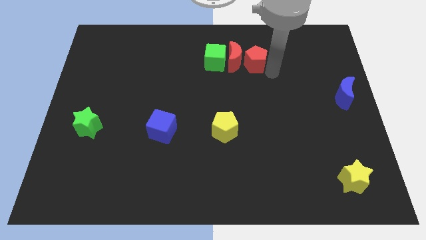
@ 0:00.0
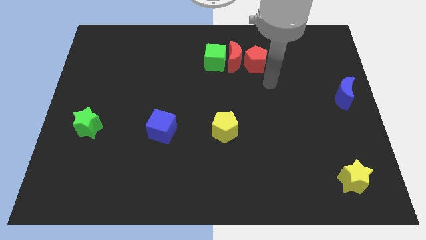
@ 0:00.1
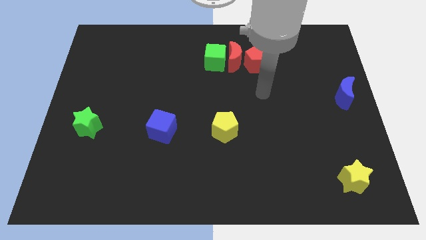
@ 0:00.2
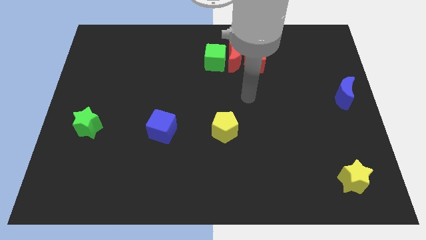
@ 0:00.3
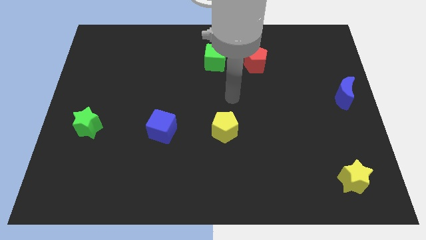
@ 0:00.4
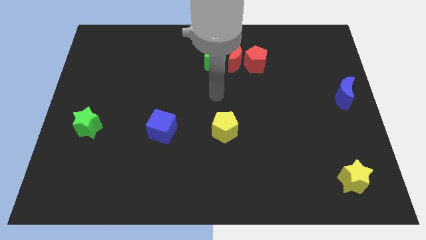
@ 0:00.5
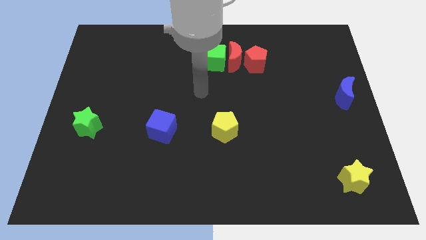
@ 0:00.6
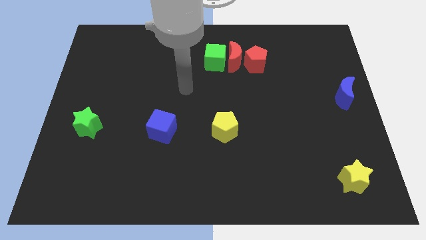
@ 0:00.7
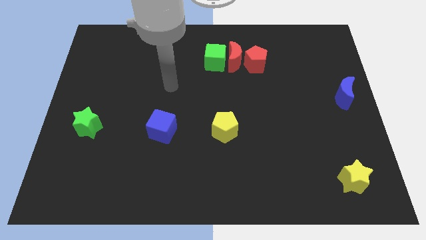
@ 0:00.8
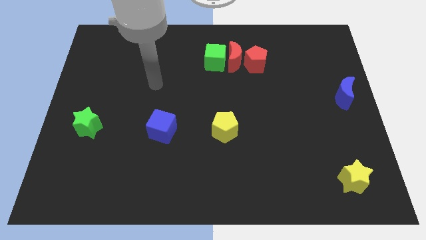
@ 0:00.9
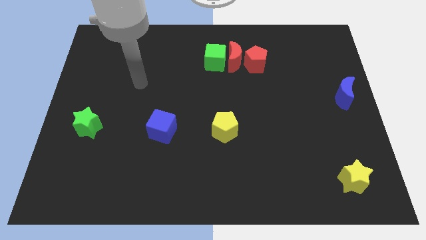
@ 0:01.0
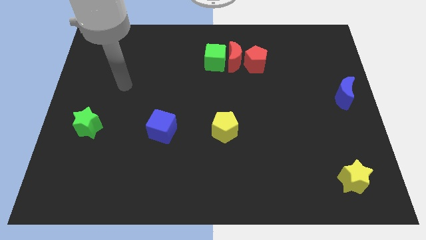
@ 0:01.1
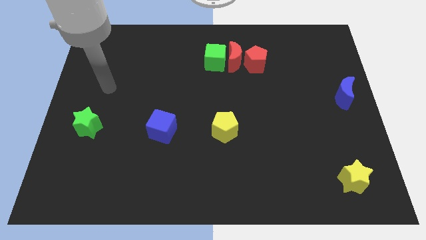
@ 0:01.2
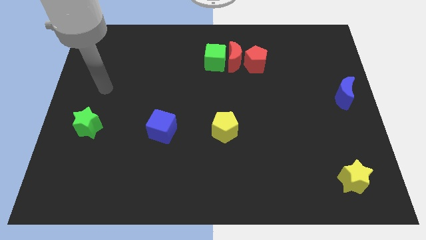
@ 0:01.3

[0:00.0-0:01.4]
move your hand away from the red pentagon

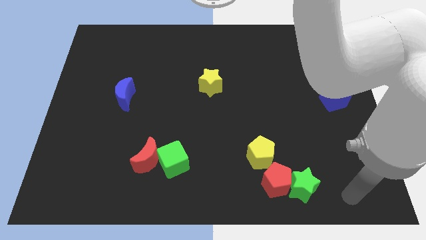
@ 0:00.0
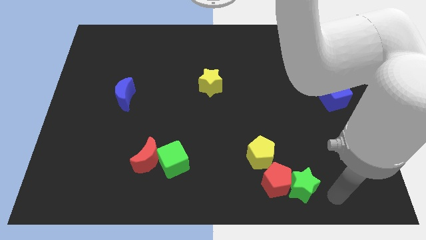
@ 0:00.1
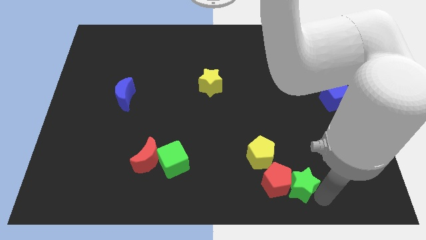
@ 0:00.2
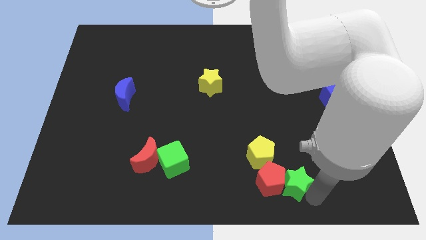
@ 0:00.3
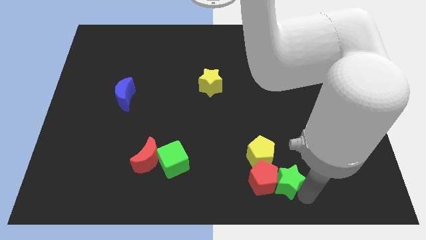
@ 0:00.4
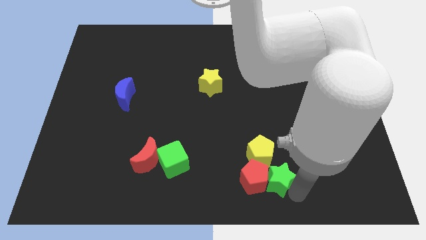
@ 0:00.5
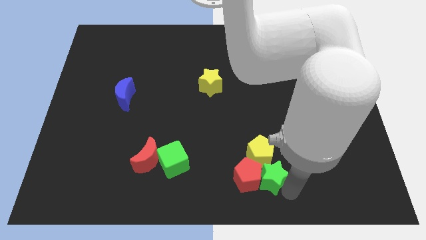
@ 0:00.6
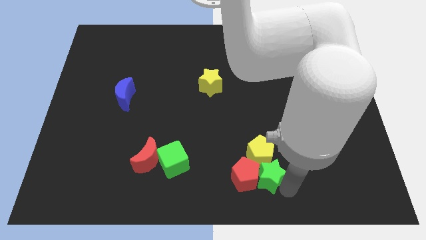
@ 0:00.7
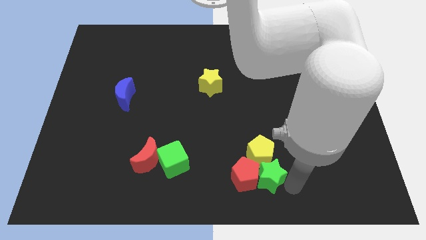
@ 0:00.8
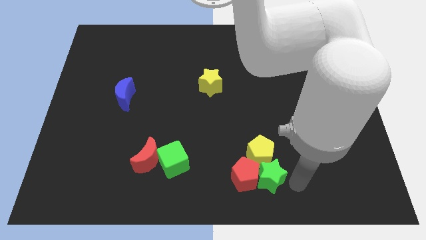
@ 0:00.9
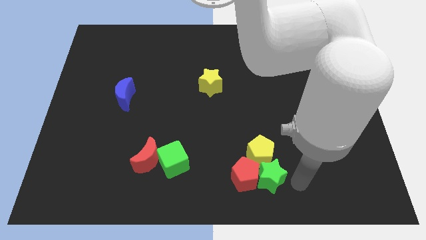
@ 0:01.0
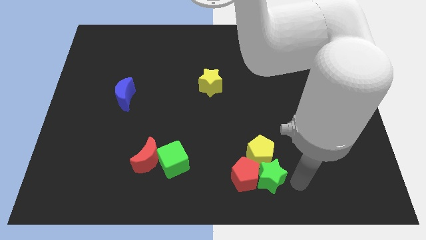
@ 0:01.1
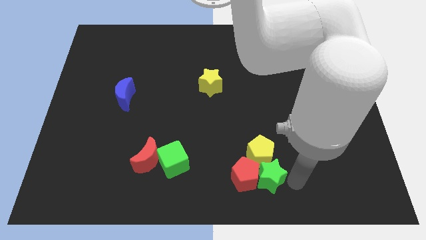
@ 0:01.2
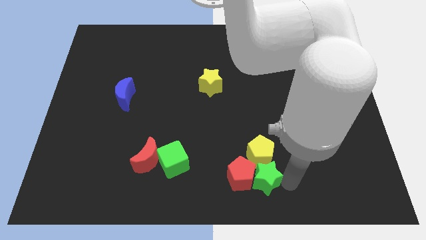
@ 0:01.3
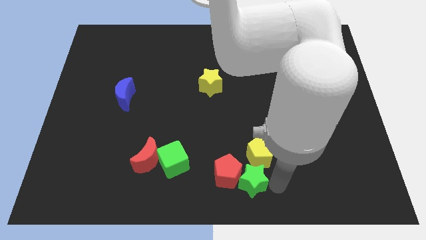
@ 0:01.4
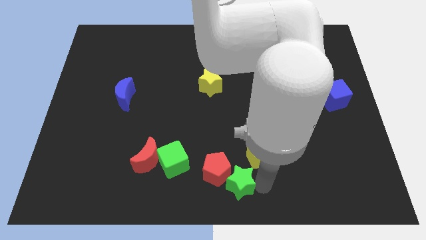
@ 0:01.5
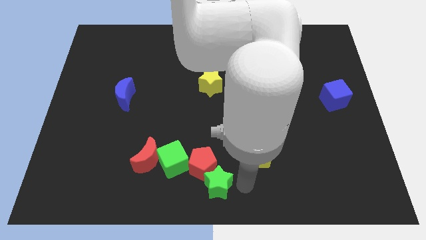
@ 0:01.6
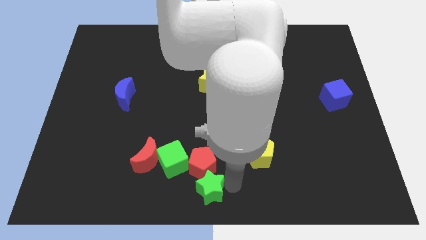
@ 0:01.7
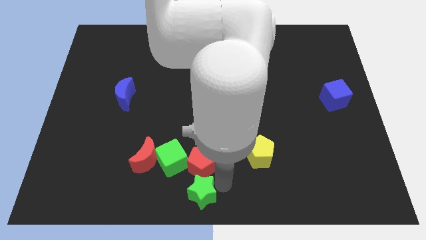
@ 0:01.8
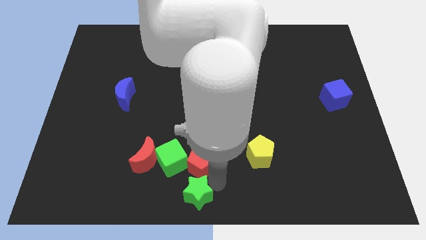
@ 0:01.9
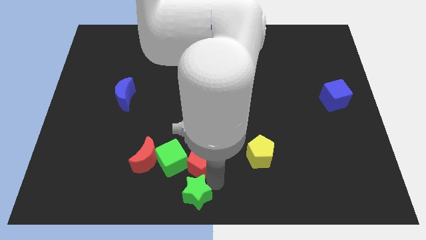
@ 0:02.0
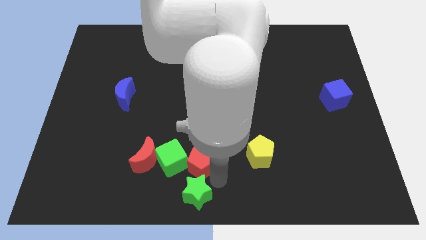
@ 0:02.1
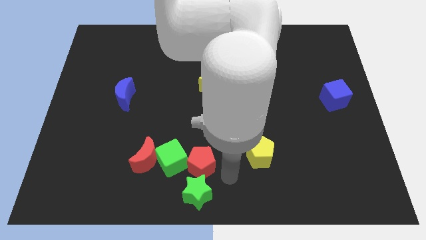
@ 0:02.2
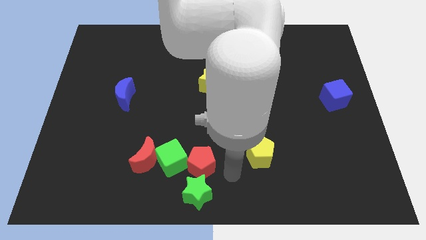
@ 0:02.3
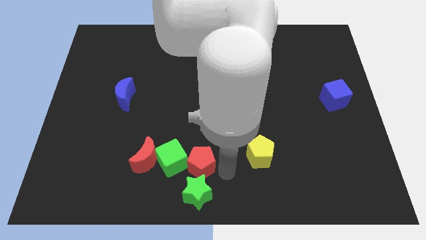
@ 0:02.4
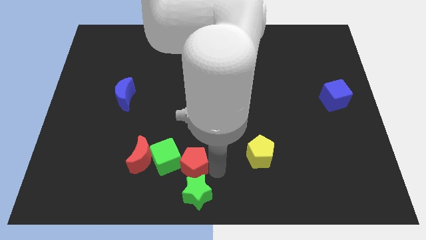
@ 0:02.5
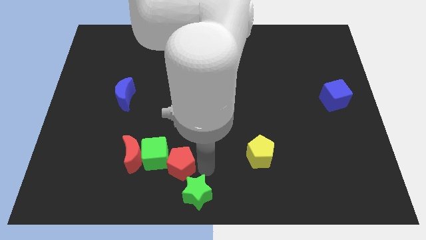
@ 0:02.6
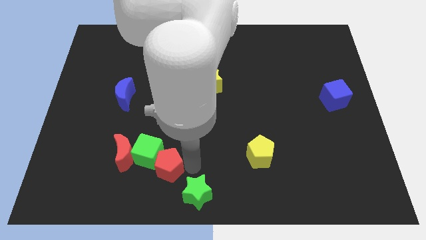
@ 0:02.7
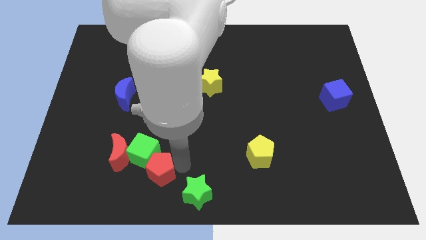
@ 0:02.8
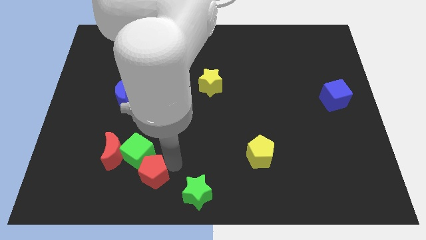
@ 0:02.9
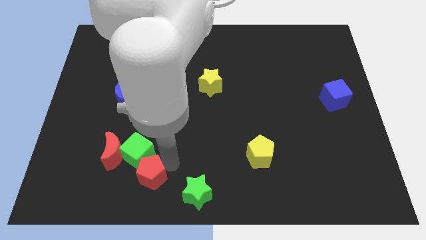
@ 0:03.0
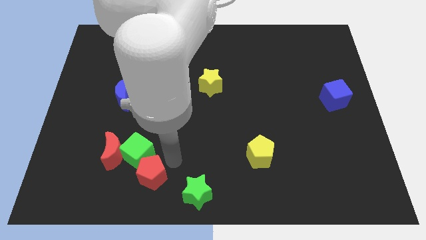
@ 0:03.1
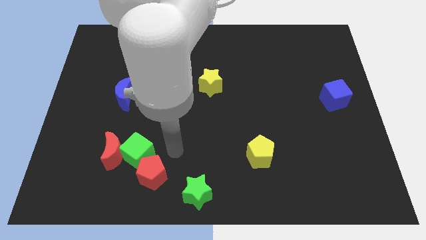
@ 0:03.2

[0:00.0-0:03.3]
push the red pentagon into the right side of the green cube

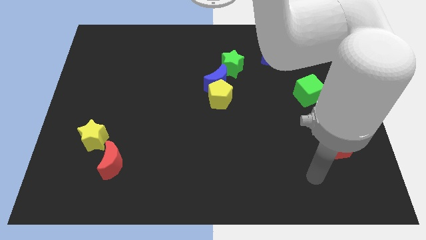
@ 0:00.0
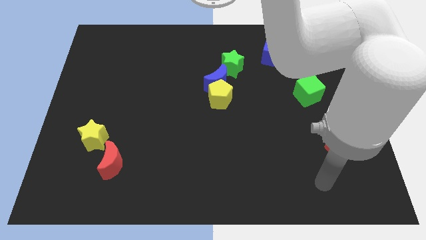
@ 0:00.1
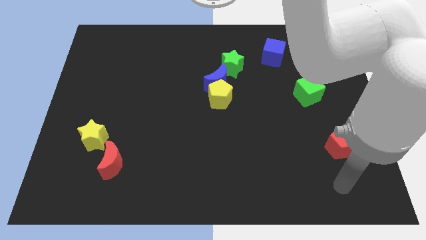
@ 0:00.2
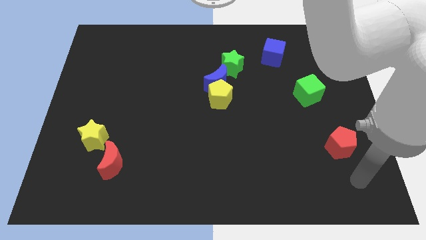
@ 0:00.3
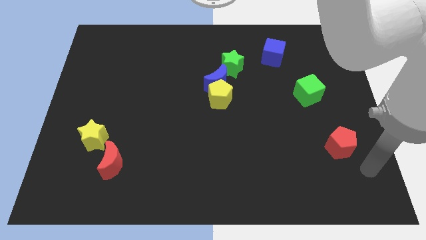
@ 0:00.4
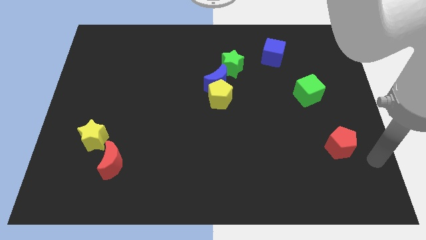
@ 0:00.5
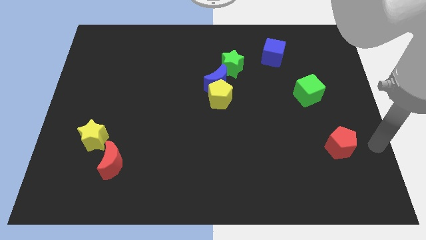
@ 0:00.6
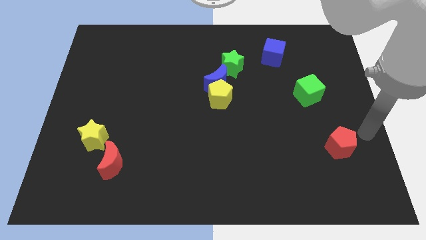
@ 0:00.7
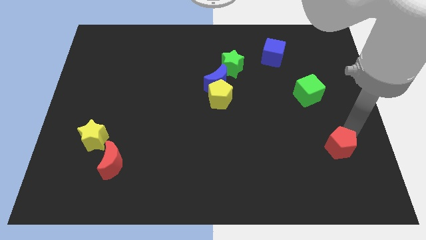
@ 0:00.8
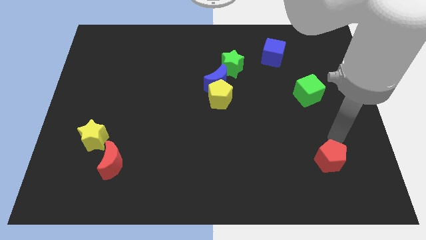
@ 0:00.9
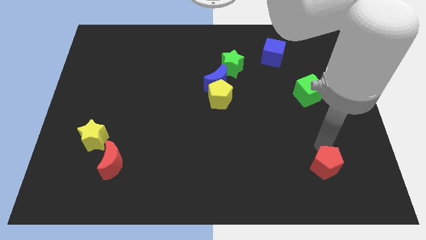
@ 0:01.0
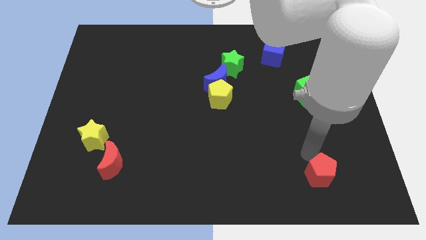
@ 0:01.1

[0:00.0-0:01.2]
place the red pentagon vertical to the green cube at the bottom

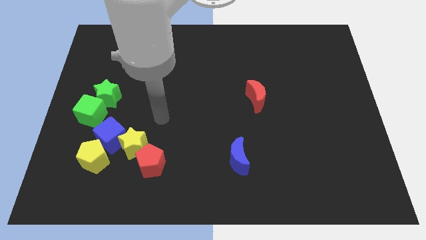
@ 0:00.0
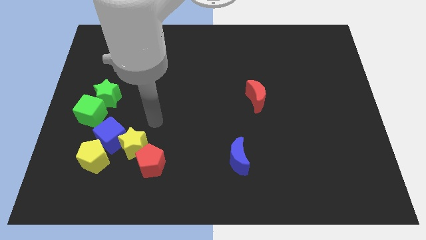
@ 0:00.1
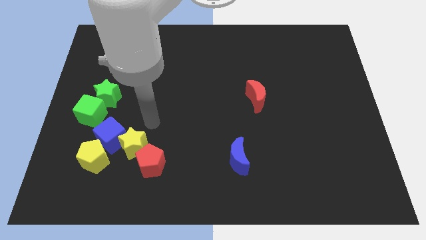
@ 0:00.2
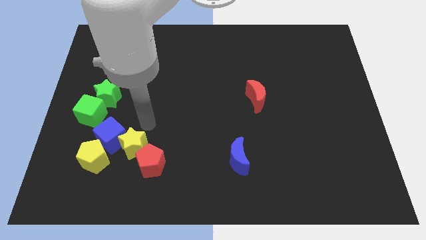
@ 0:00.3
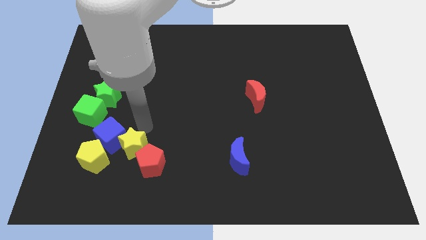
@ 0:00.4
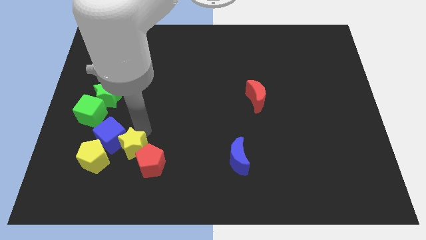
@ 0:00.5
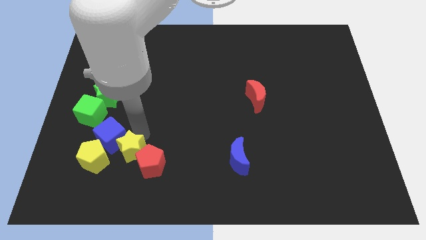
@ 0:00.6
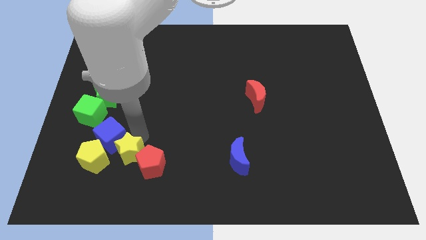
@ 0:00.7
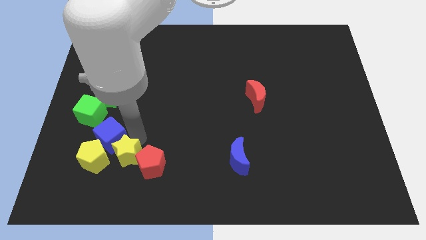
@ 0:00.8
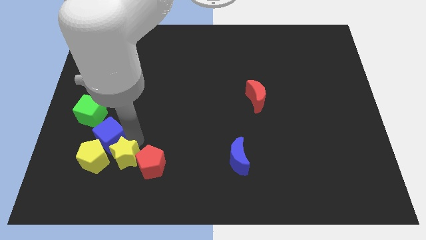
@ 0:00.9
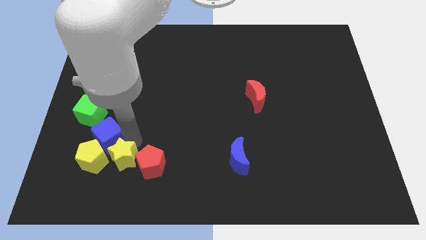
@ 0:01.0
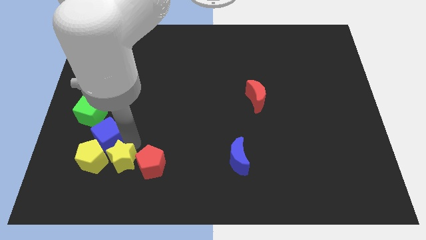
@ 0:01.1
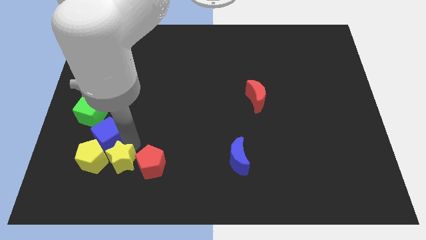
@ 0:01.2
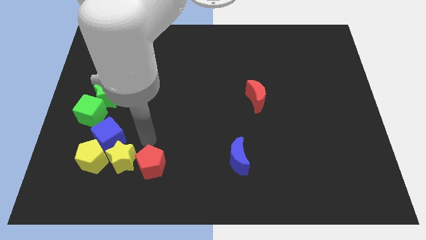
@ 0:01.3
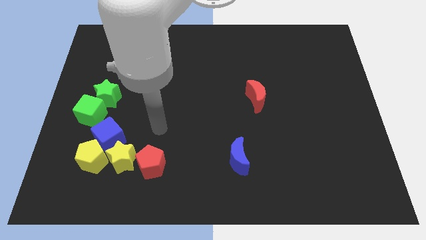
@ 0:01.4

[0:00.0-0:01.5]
move yellow star to the right of yellow pentagon

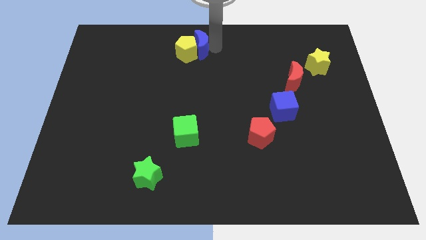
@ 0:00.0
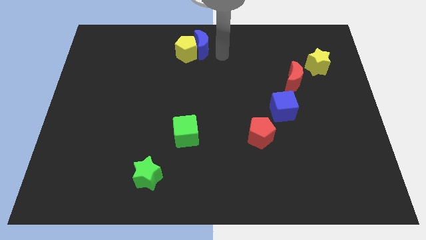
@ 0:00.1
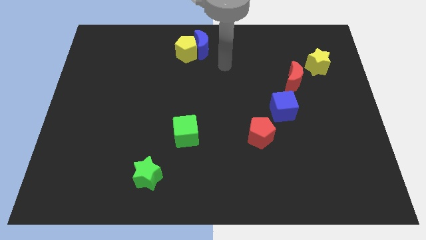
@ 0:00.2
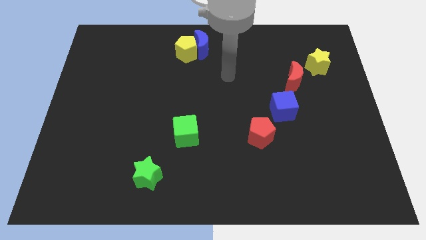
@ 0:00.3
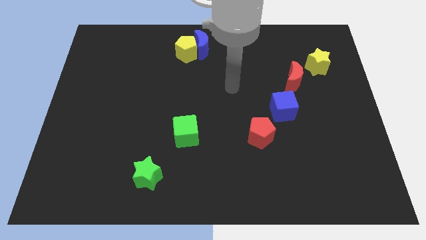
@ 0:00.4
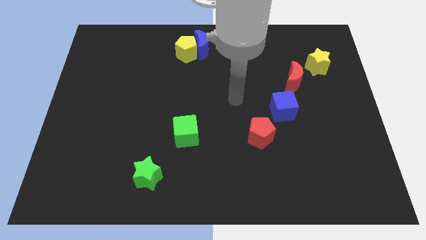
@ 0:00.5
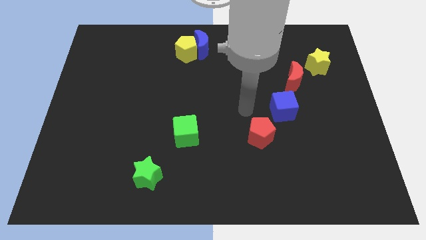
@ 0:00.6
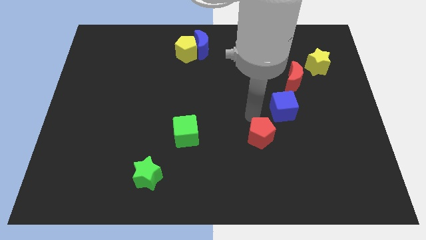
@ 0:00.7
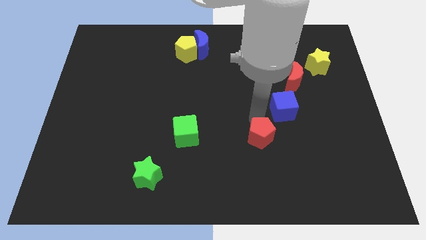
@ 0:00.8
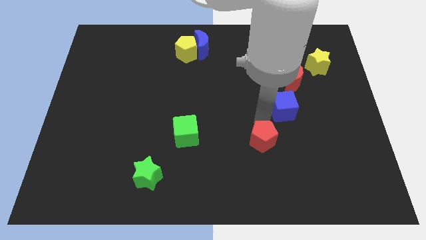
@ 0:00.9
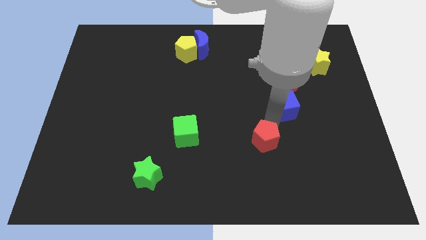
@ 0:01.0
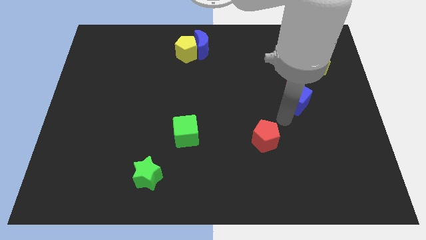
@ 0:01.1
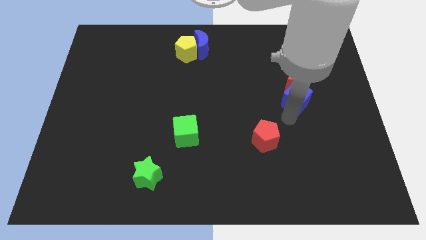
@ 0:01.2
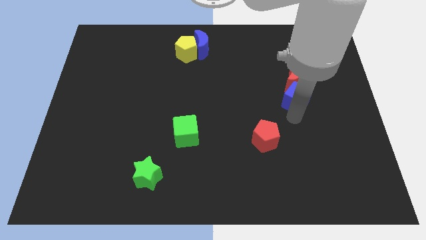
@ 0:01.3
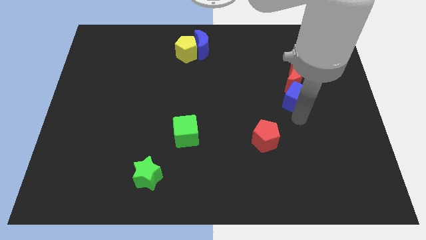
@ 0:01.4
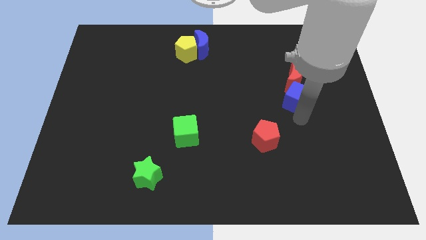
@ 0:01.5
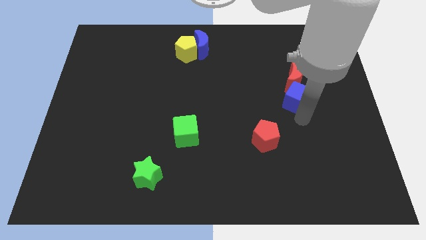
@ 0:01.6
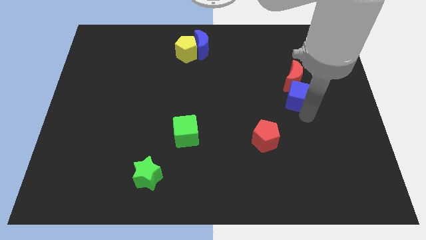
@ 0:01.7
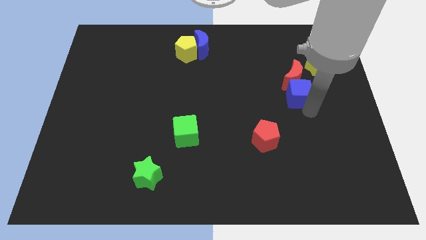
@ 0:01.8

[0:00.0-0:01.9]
move the blue cube to the bottom of the red crescent
